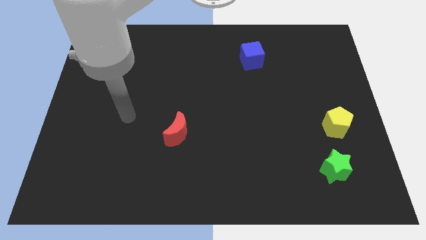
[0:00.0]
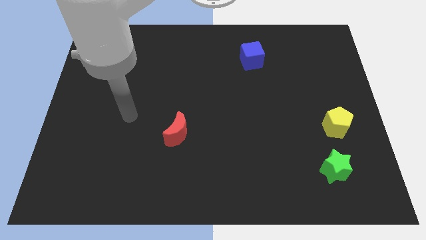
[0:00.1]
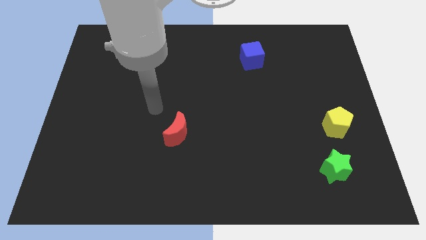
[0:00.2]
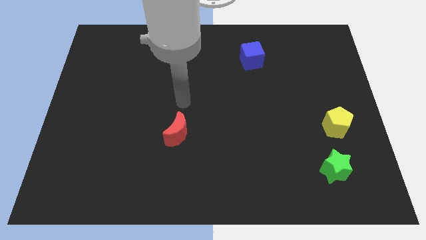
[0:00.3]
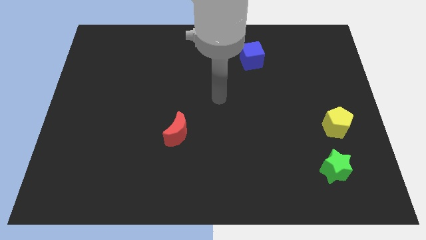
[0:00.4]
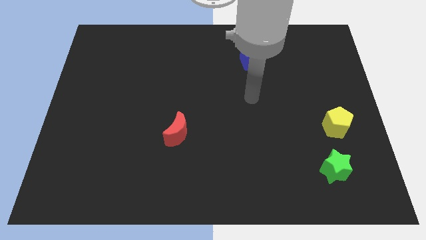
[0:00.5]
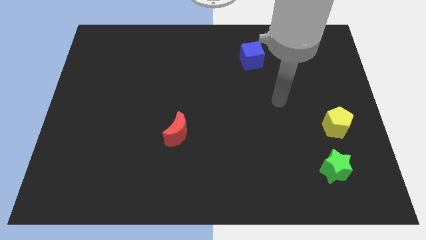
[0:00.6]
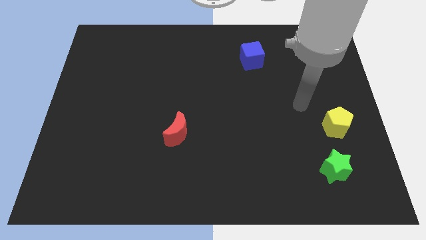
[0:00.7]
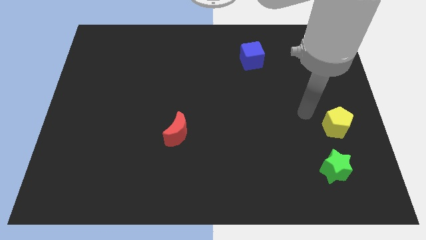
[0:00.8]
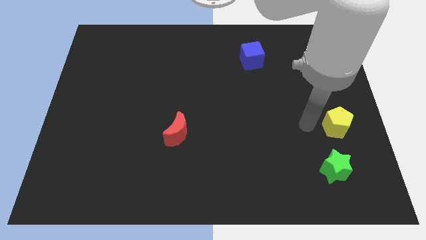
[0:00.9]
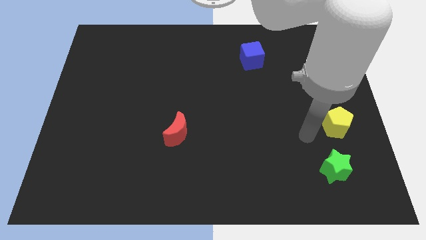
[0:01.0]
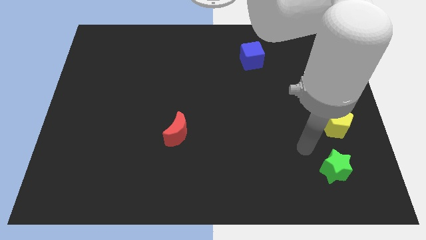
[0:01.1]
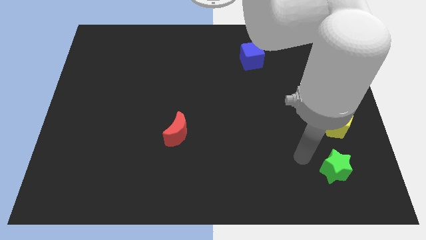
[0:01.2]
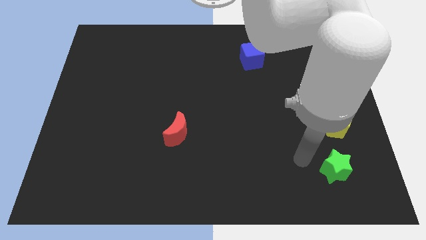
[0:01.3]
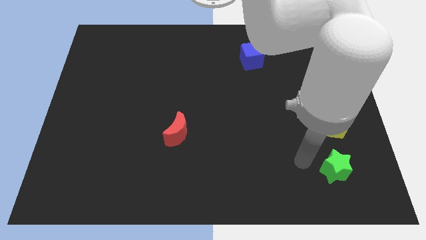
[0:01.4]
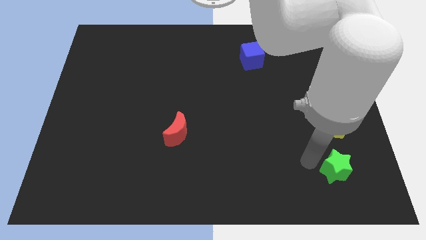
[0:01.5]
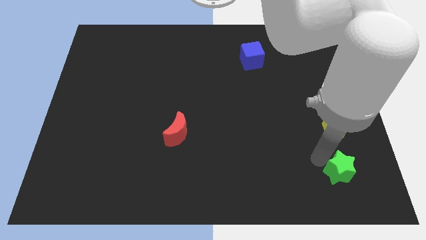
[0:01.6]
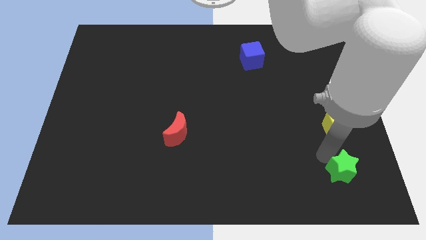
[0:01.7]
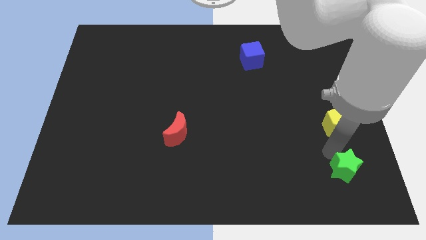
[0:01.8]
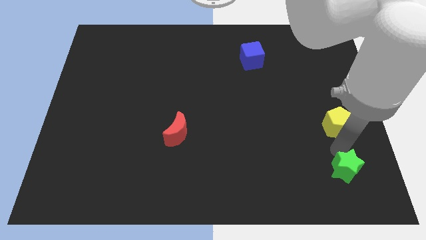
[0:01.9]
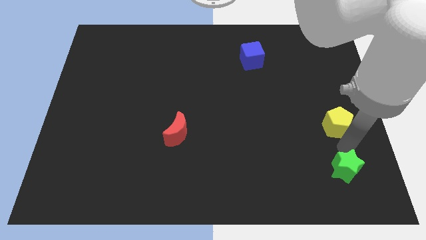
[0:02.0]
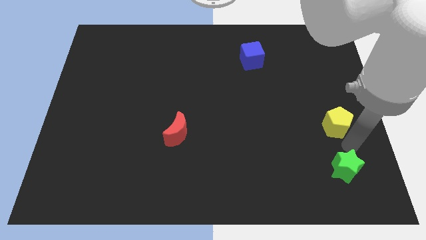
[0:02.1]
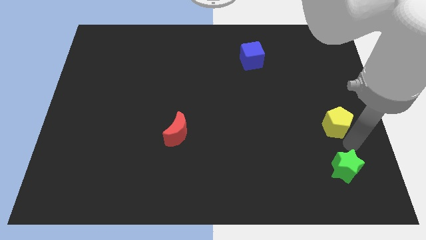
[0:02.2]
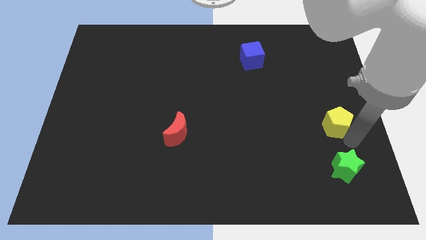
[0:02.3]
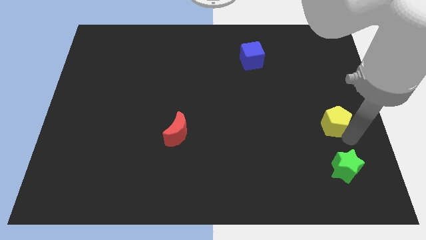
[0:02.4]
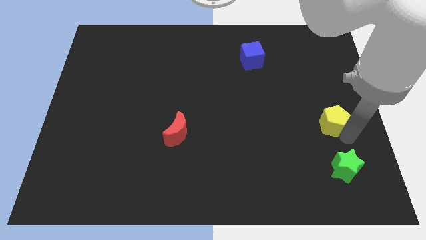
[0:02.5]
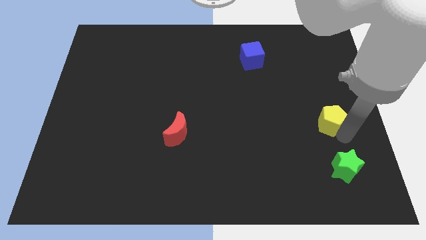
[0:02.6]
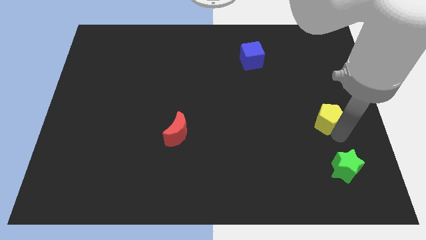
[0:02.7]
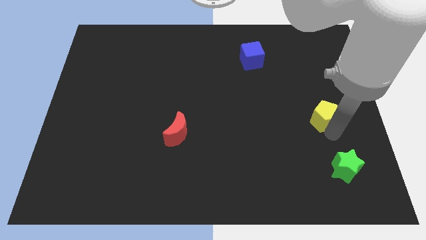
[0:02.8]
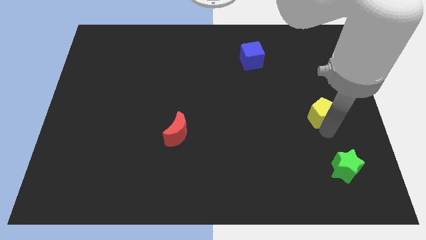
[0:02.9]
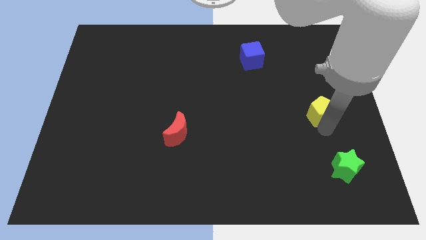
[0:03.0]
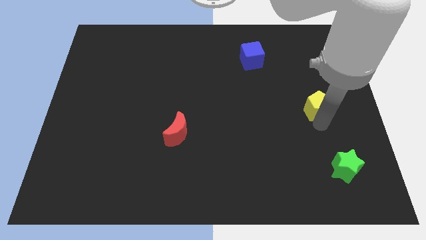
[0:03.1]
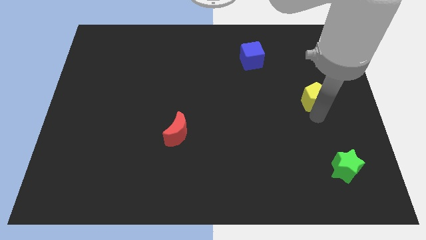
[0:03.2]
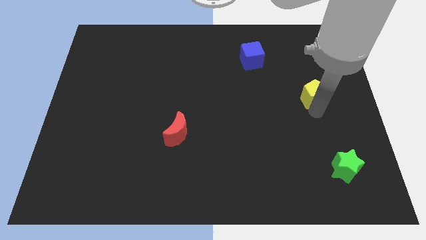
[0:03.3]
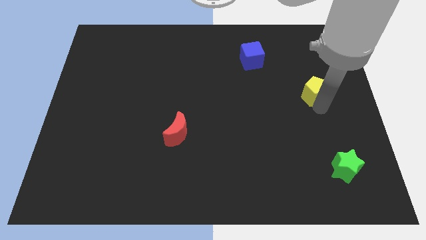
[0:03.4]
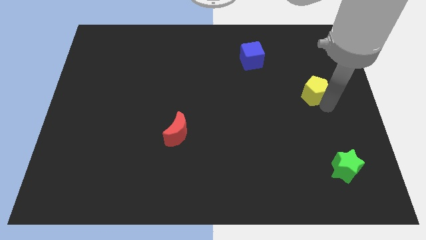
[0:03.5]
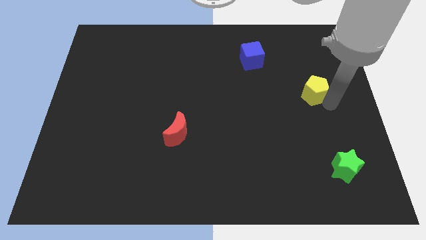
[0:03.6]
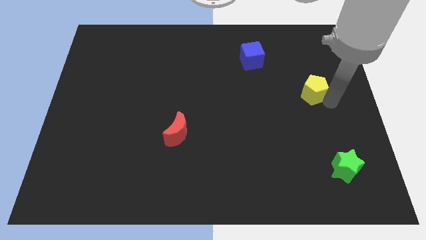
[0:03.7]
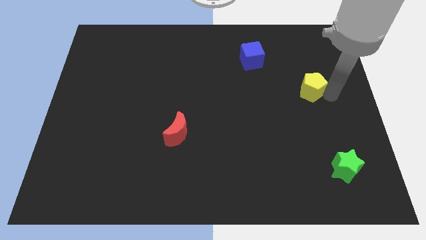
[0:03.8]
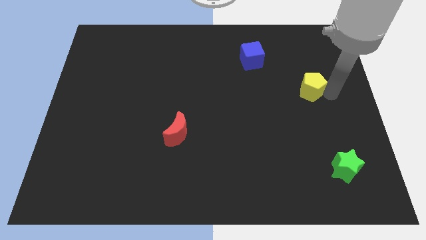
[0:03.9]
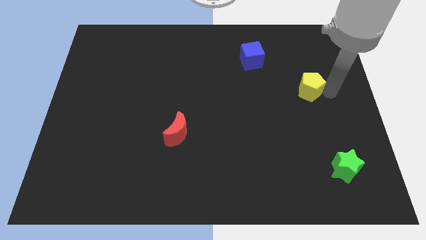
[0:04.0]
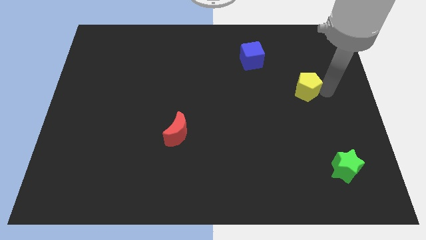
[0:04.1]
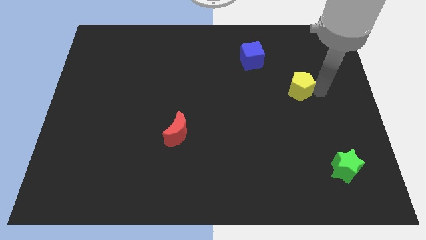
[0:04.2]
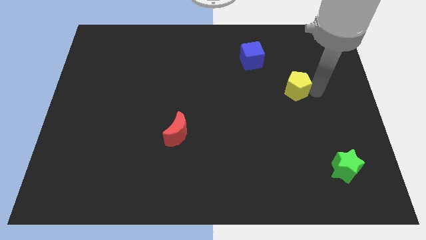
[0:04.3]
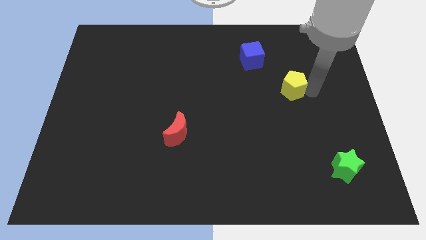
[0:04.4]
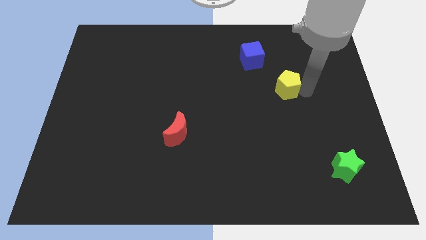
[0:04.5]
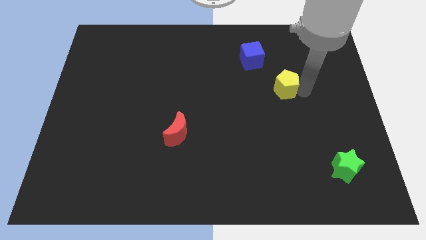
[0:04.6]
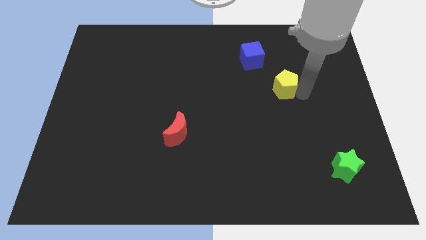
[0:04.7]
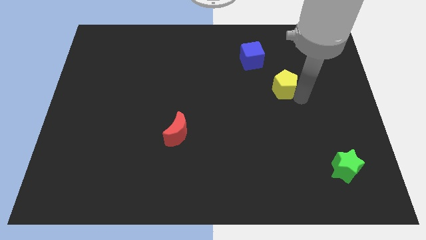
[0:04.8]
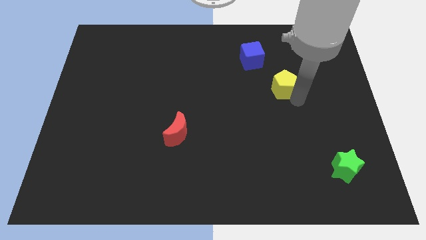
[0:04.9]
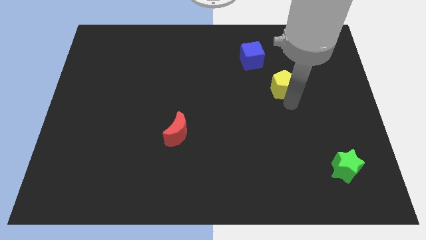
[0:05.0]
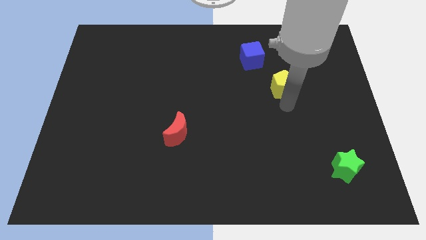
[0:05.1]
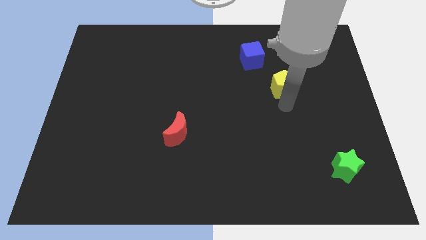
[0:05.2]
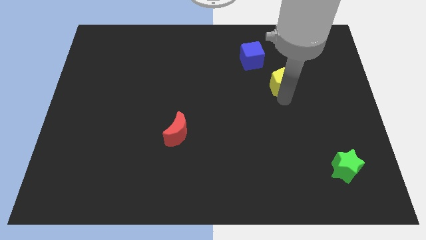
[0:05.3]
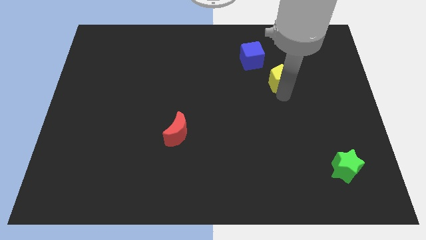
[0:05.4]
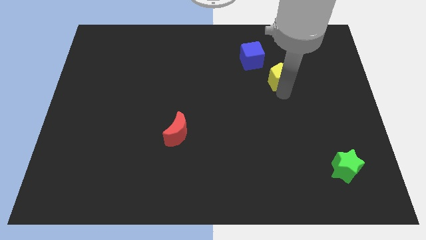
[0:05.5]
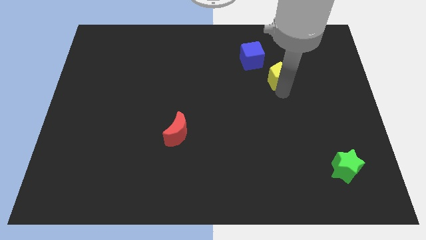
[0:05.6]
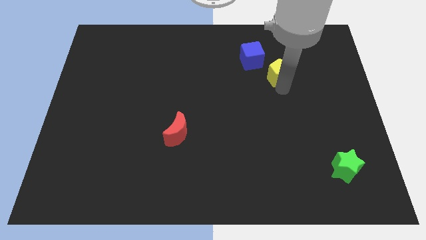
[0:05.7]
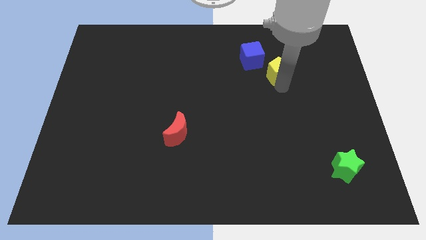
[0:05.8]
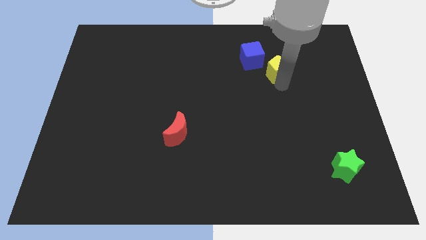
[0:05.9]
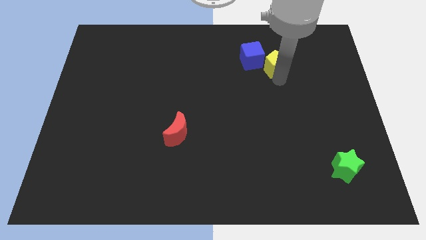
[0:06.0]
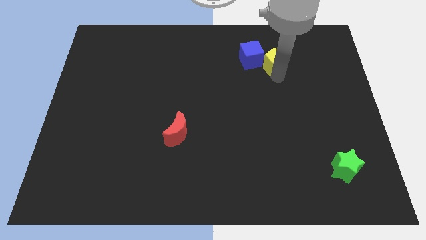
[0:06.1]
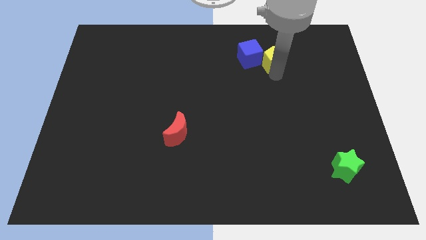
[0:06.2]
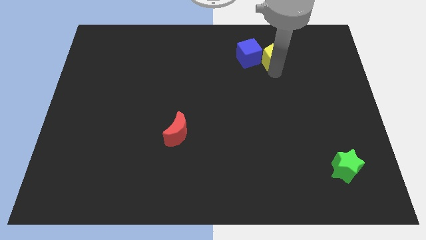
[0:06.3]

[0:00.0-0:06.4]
put the yellow block next to the cube

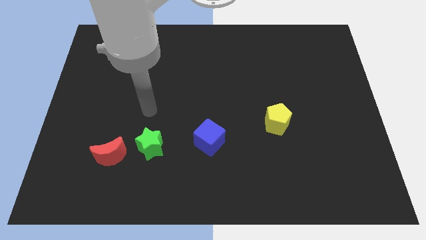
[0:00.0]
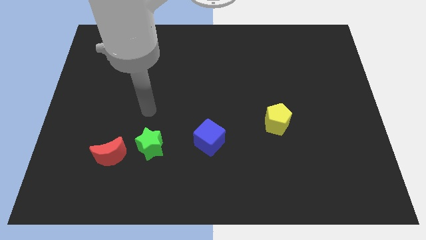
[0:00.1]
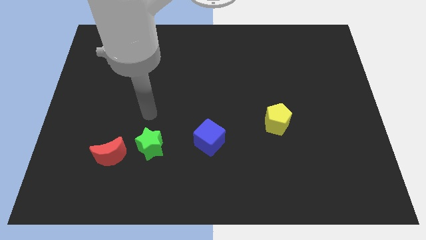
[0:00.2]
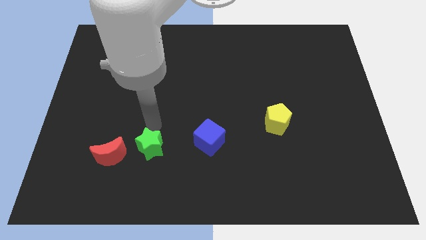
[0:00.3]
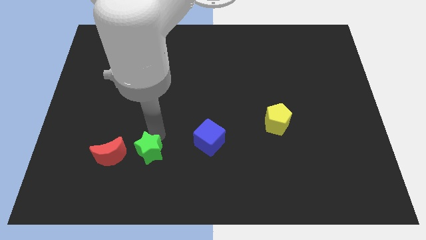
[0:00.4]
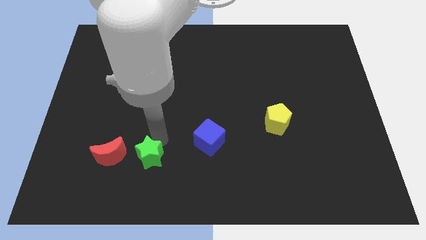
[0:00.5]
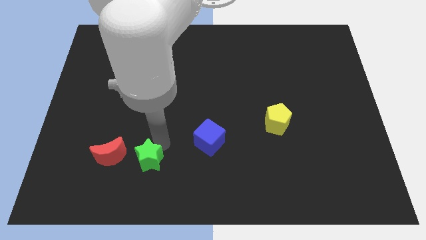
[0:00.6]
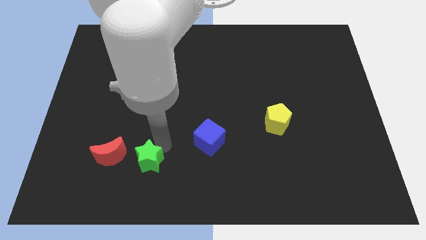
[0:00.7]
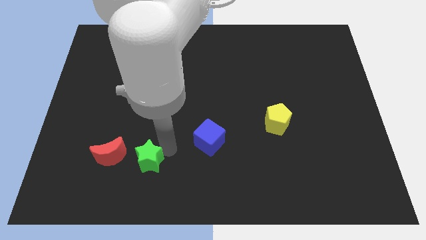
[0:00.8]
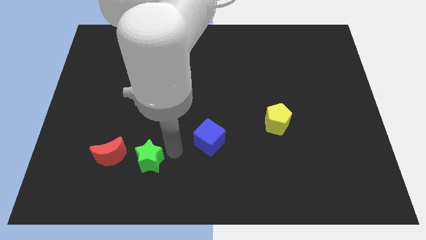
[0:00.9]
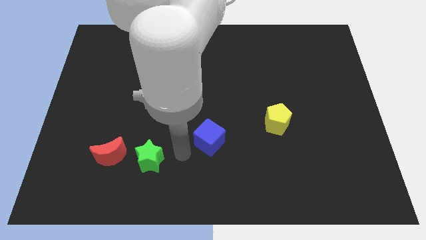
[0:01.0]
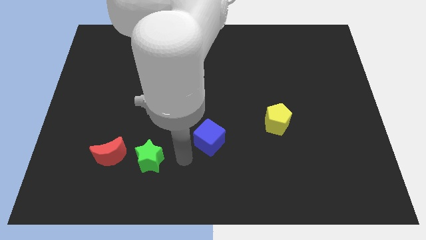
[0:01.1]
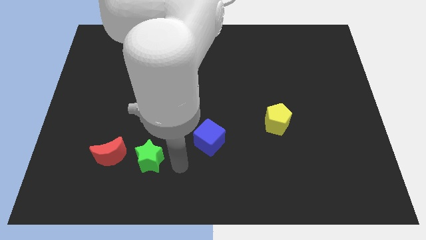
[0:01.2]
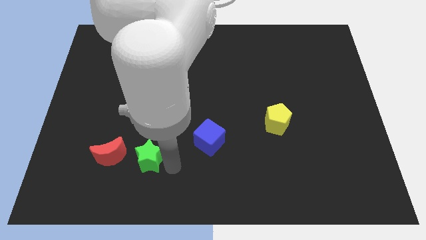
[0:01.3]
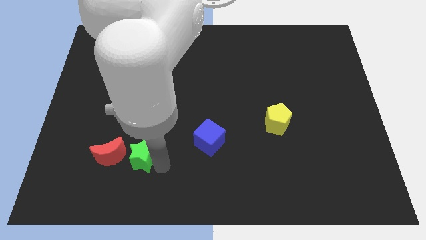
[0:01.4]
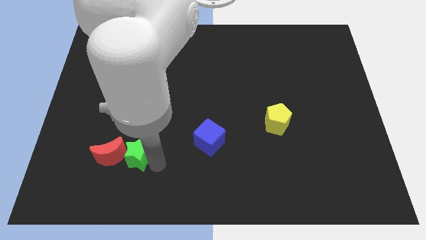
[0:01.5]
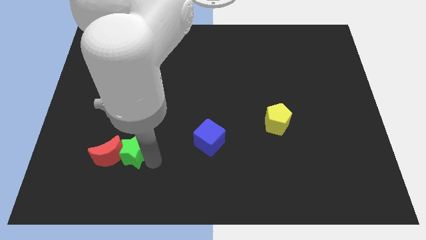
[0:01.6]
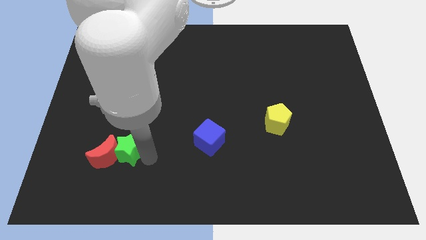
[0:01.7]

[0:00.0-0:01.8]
push the star to the red moon

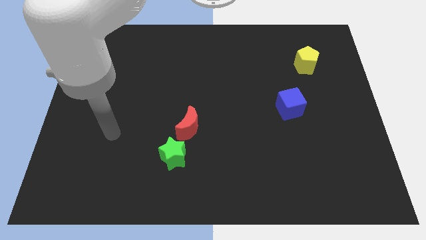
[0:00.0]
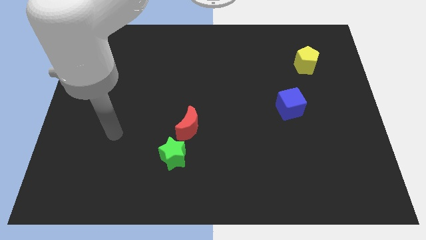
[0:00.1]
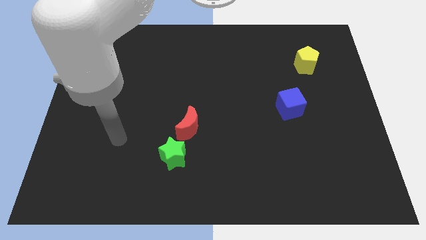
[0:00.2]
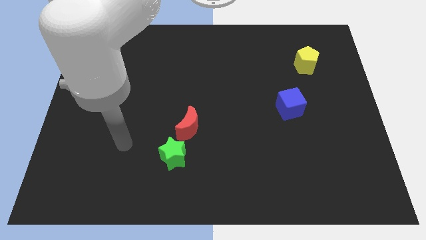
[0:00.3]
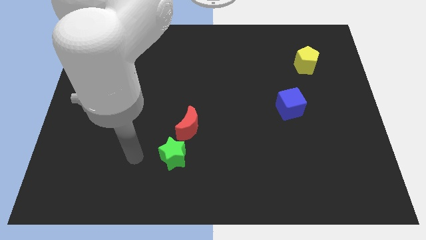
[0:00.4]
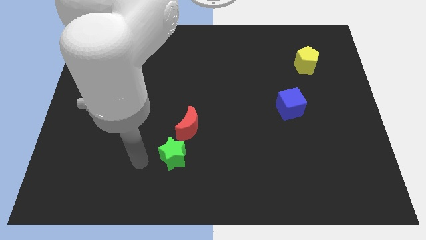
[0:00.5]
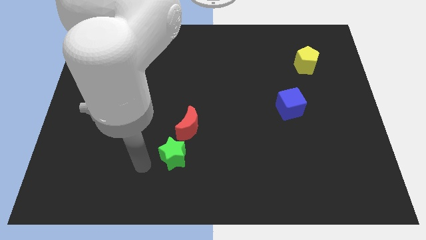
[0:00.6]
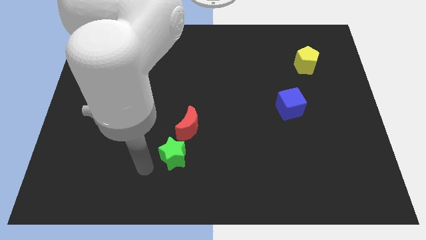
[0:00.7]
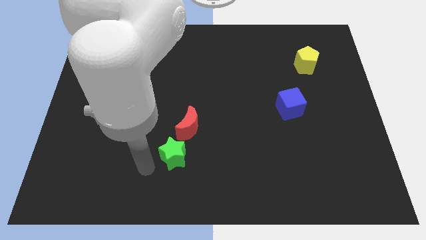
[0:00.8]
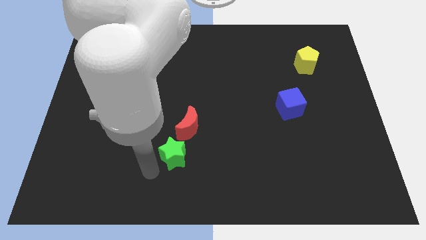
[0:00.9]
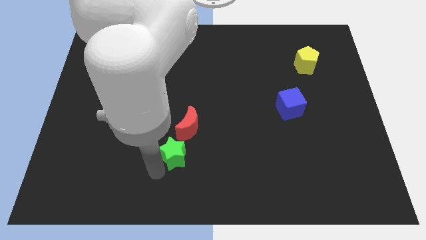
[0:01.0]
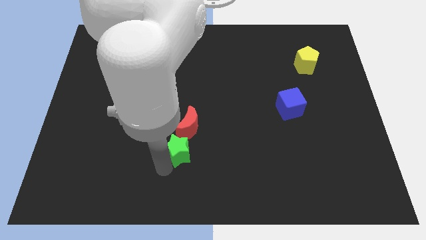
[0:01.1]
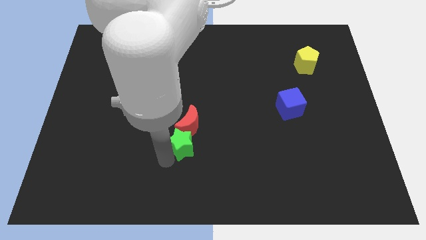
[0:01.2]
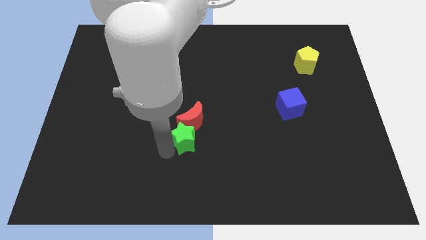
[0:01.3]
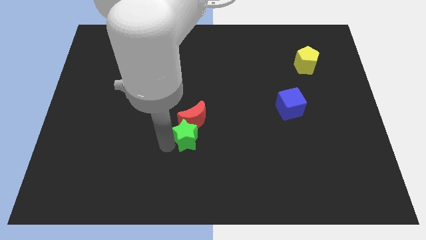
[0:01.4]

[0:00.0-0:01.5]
push the green star next to the red moon
